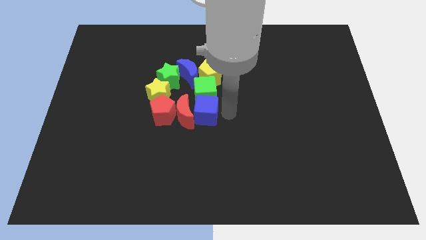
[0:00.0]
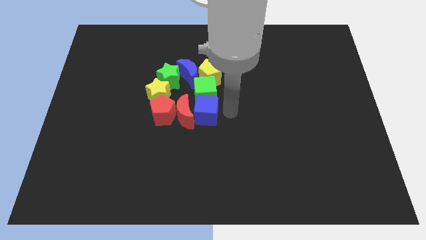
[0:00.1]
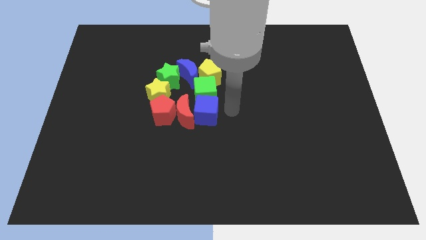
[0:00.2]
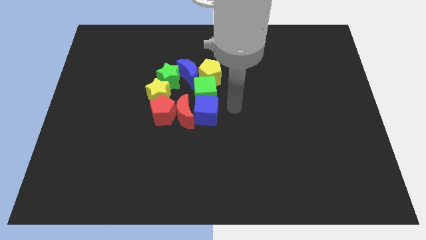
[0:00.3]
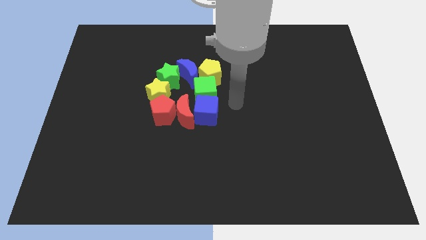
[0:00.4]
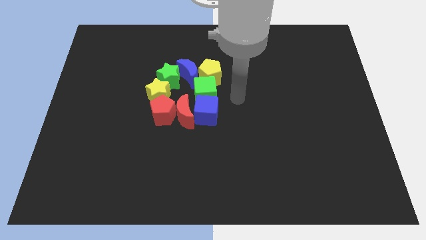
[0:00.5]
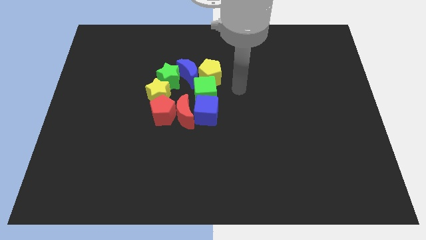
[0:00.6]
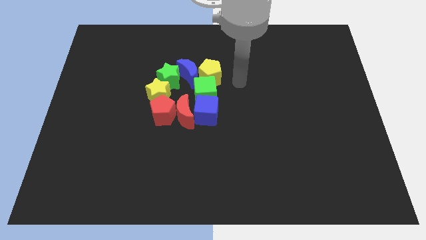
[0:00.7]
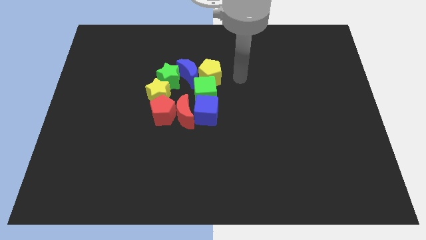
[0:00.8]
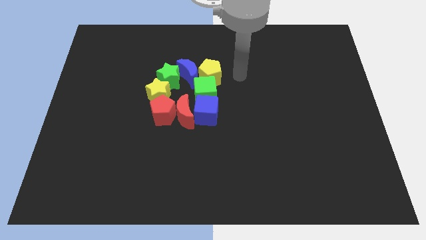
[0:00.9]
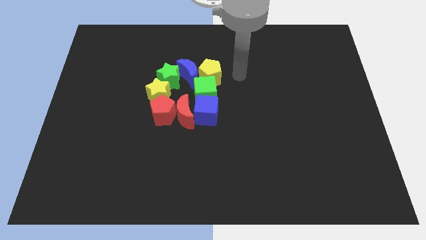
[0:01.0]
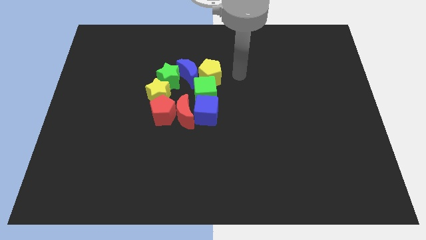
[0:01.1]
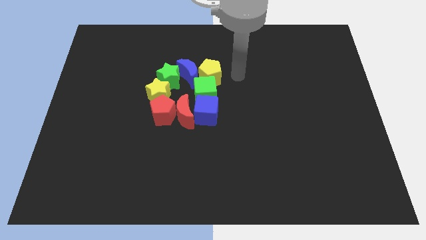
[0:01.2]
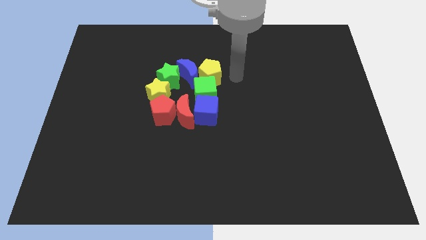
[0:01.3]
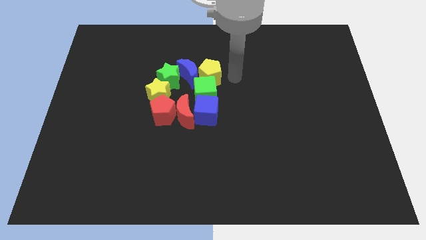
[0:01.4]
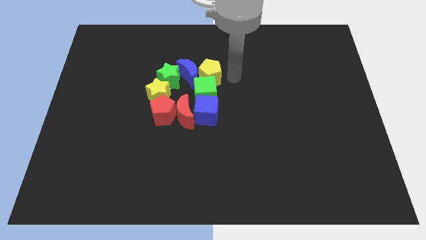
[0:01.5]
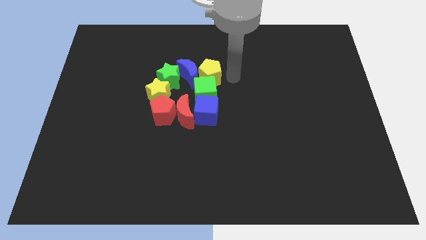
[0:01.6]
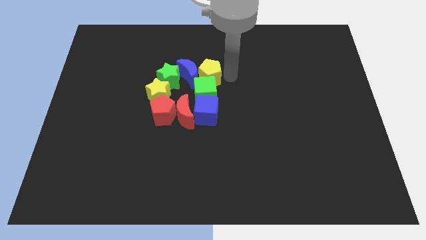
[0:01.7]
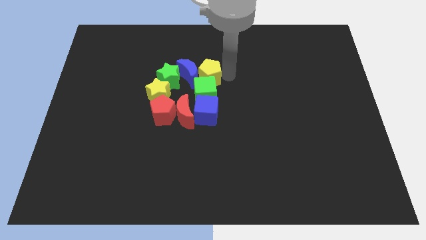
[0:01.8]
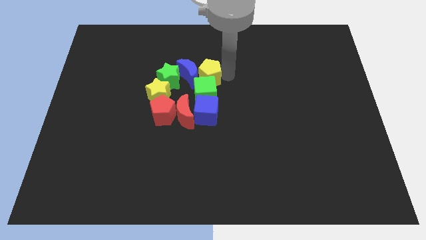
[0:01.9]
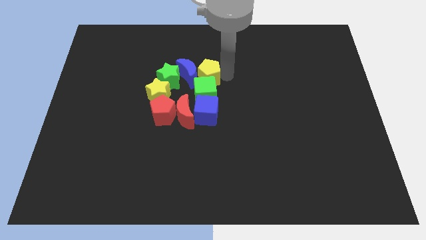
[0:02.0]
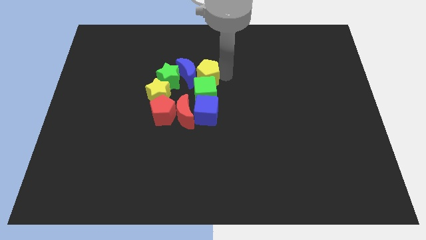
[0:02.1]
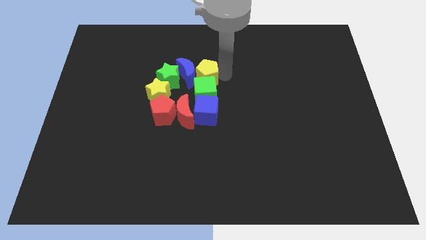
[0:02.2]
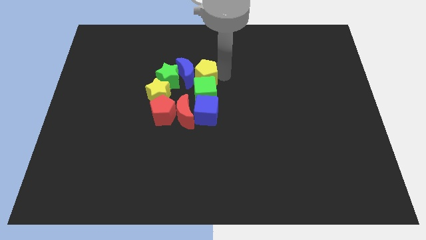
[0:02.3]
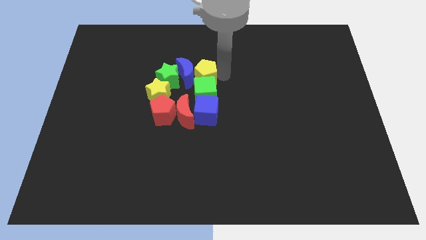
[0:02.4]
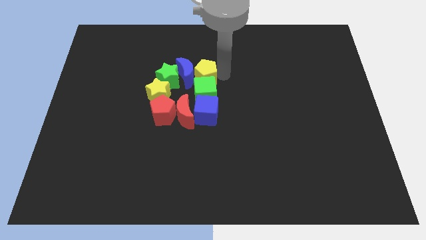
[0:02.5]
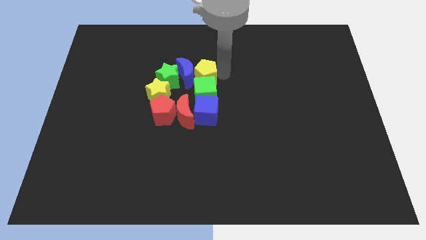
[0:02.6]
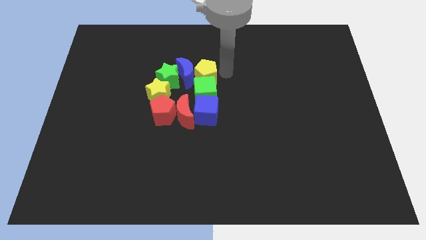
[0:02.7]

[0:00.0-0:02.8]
push the yellow pentagon to the top of green cube

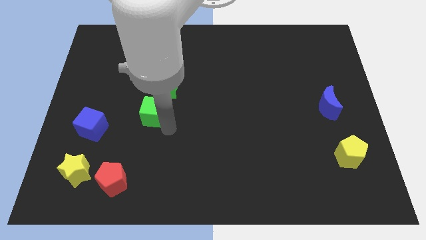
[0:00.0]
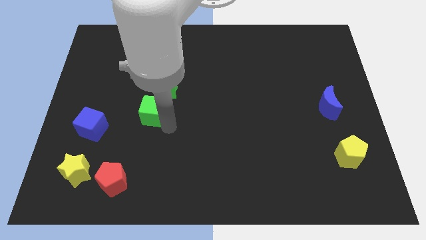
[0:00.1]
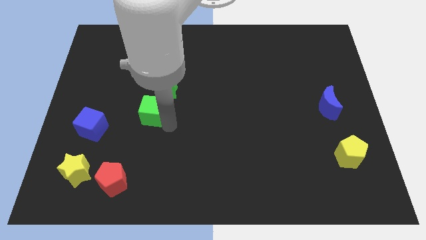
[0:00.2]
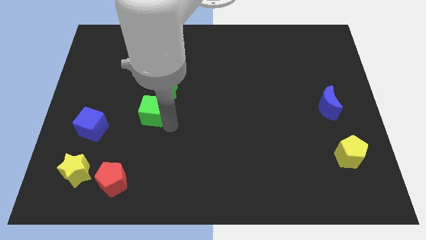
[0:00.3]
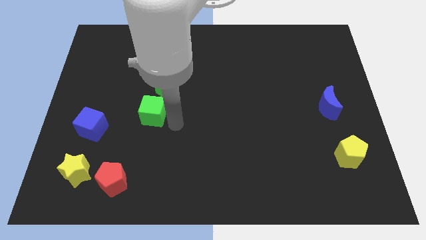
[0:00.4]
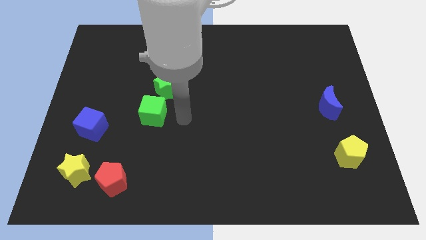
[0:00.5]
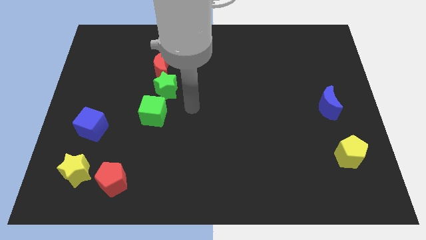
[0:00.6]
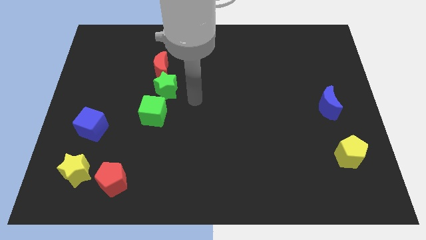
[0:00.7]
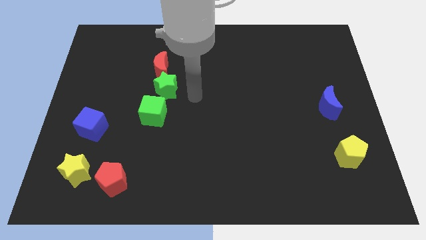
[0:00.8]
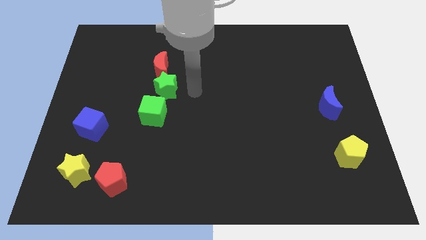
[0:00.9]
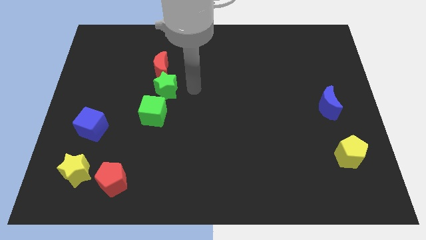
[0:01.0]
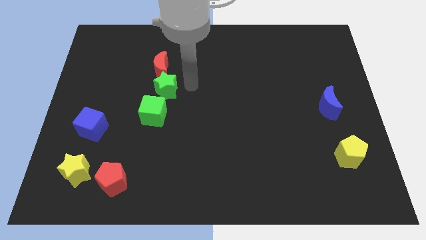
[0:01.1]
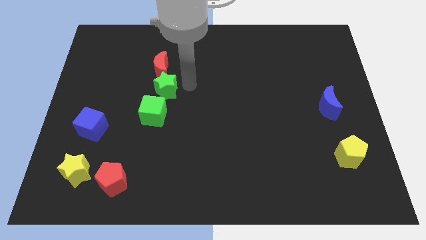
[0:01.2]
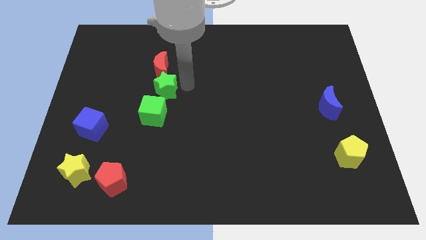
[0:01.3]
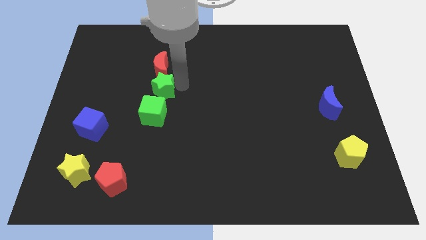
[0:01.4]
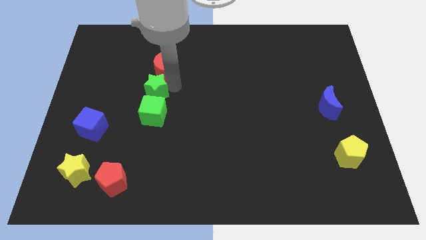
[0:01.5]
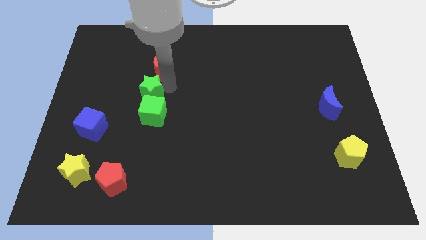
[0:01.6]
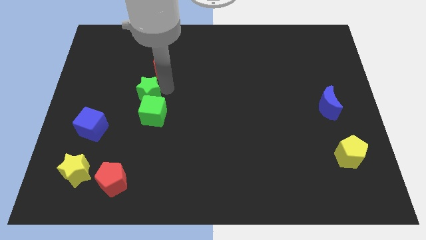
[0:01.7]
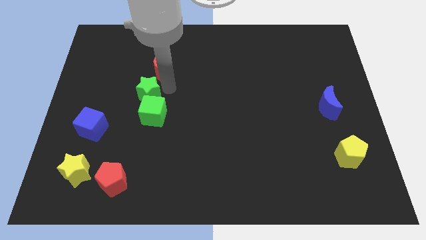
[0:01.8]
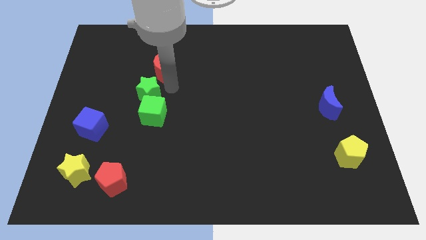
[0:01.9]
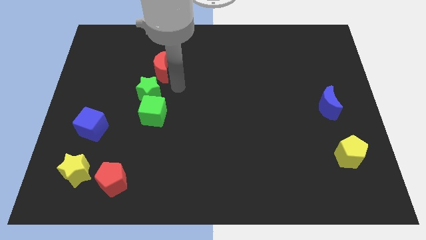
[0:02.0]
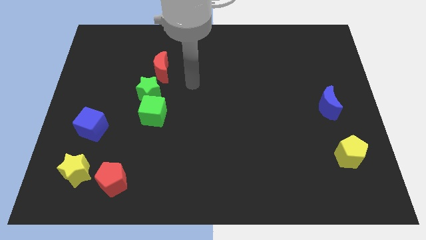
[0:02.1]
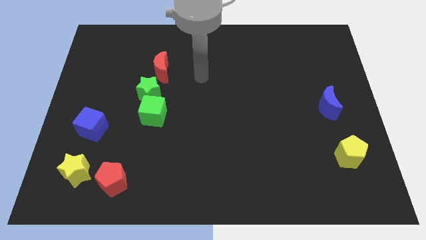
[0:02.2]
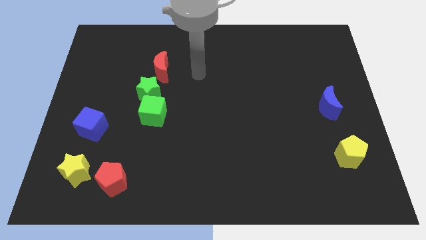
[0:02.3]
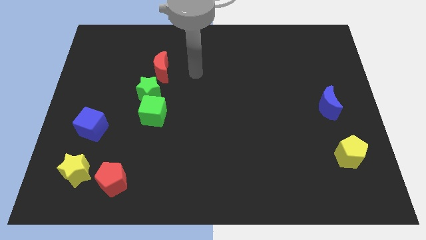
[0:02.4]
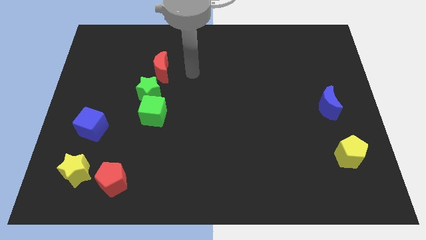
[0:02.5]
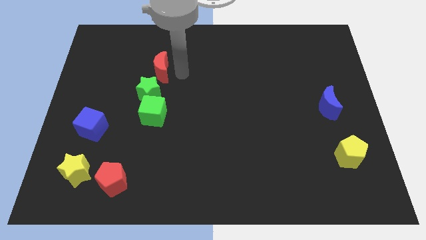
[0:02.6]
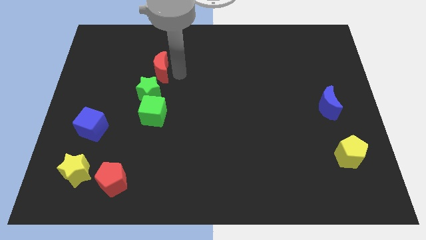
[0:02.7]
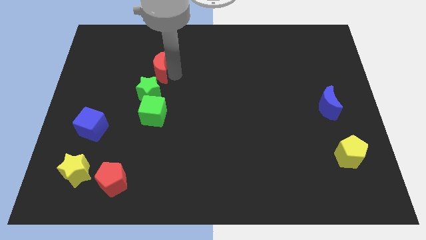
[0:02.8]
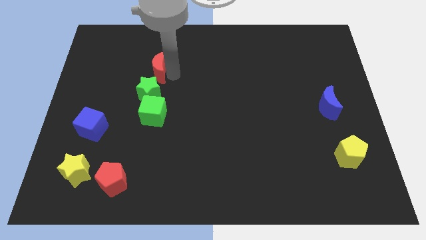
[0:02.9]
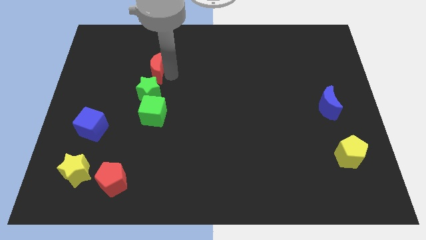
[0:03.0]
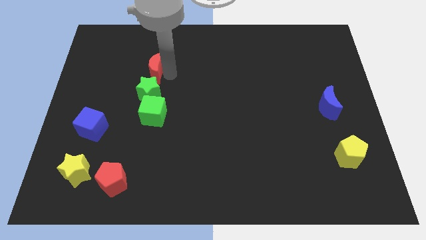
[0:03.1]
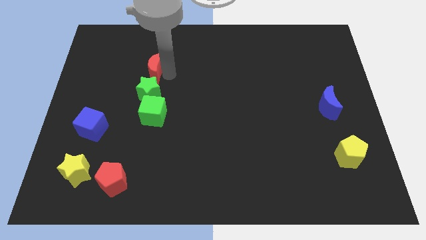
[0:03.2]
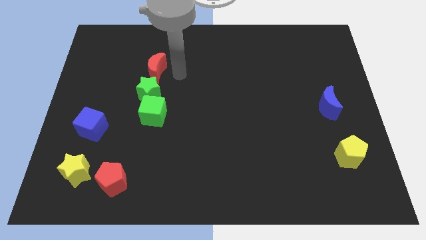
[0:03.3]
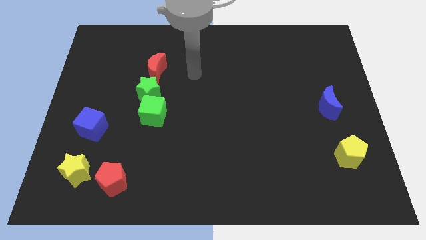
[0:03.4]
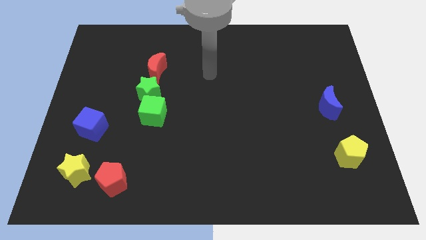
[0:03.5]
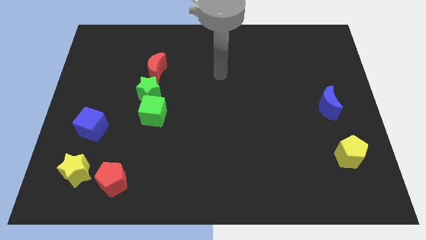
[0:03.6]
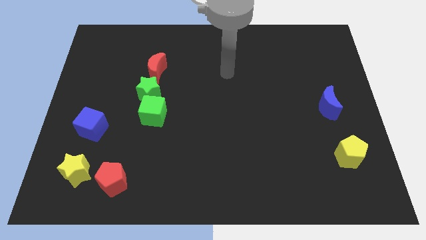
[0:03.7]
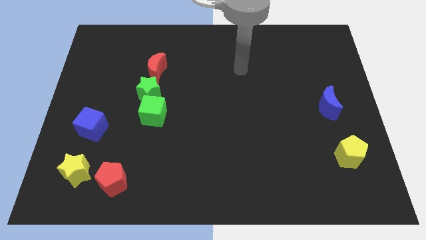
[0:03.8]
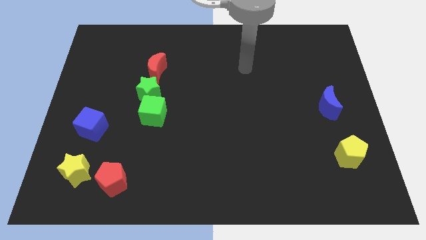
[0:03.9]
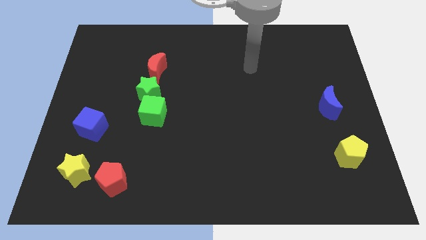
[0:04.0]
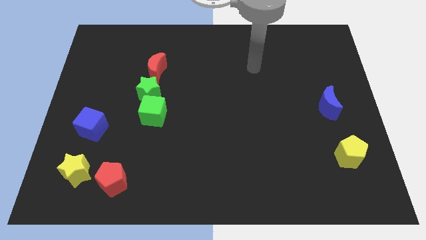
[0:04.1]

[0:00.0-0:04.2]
adjust green blocks and red moon to form a vertical line

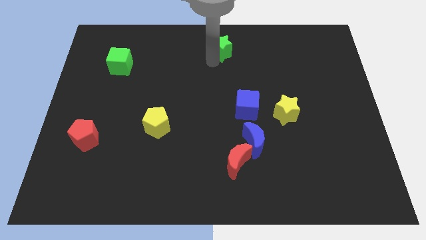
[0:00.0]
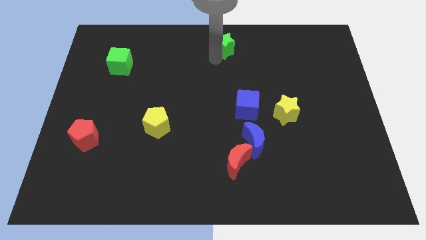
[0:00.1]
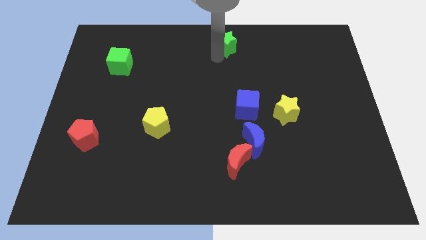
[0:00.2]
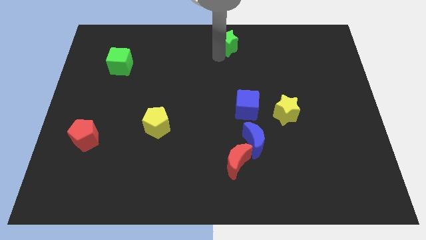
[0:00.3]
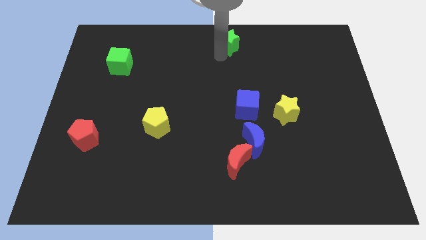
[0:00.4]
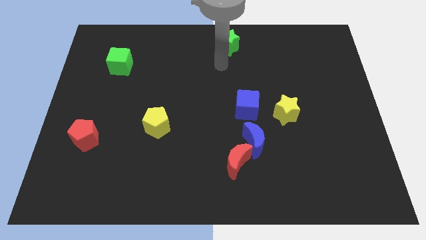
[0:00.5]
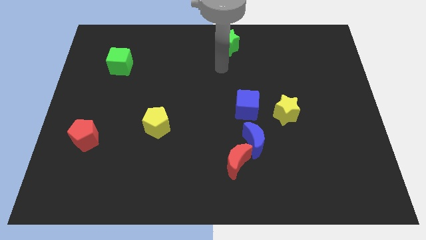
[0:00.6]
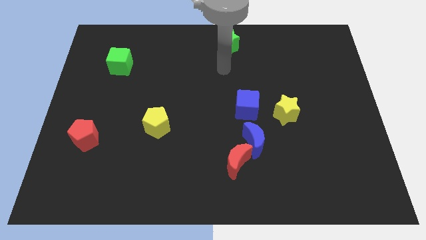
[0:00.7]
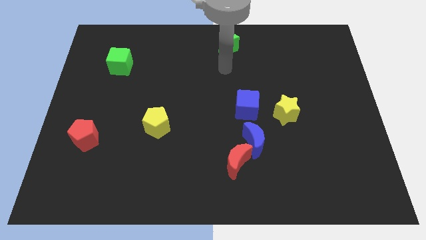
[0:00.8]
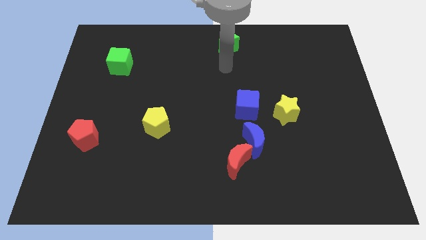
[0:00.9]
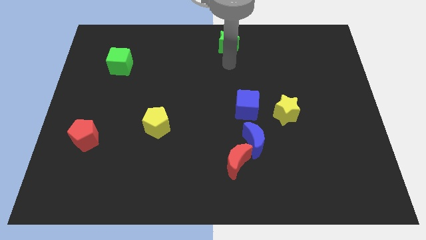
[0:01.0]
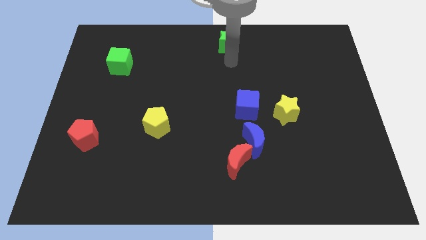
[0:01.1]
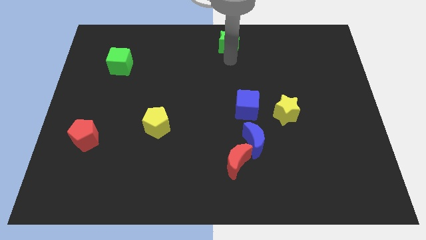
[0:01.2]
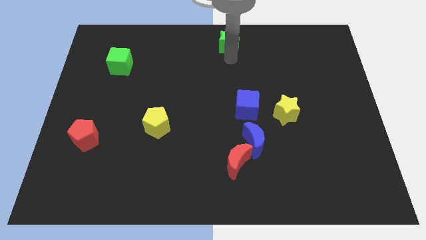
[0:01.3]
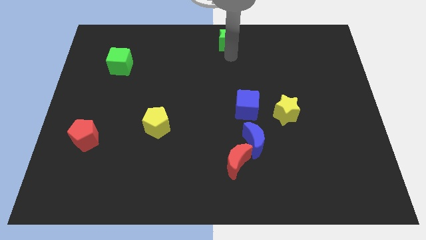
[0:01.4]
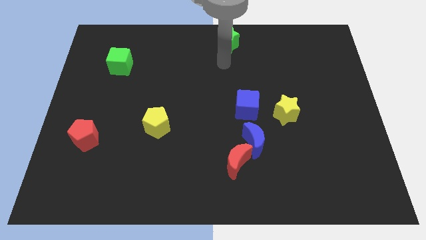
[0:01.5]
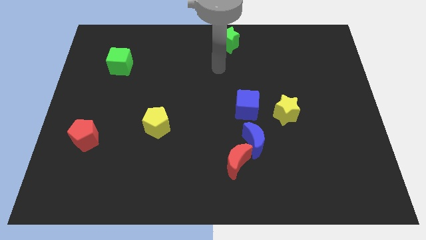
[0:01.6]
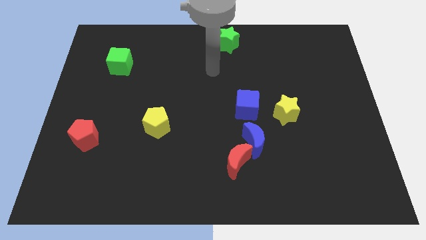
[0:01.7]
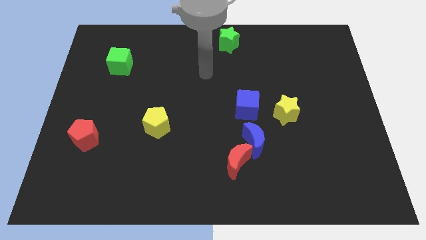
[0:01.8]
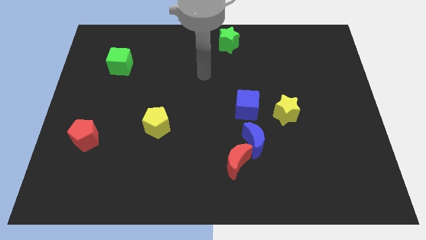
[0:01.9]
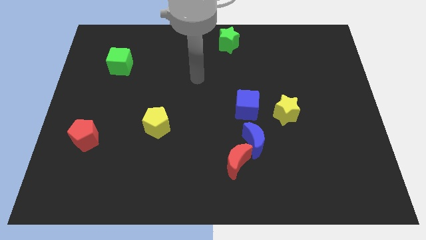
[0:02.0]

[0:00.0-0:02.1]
move green star at the top center
